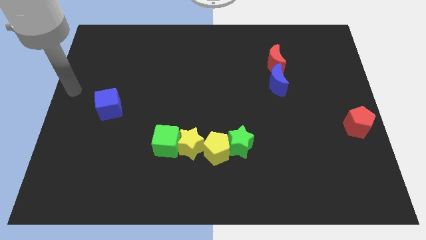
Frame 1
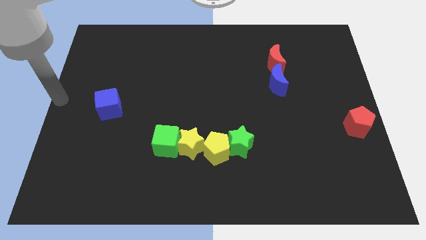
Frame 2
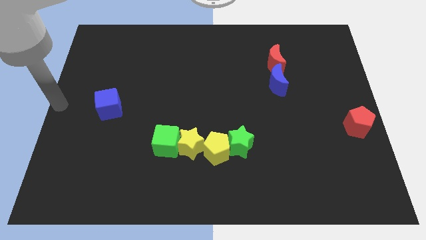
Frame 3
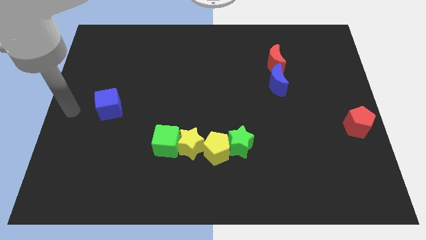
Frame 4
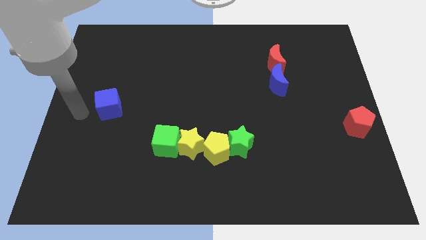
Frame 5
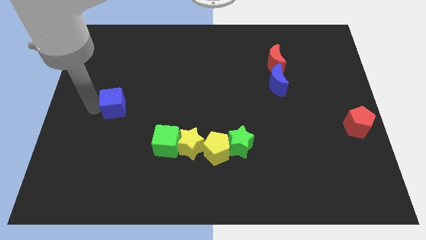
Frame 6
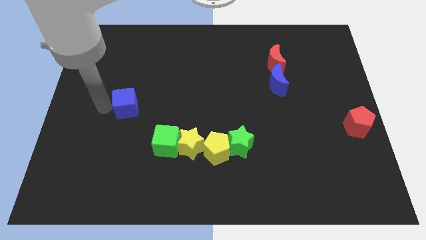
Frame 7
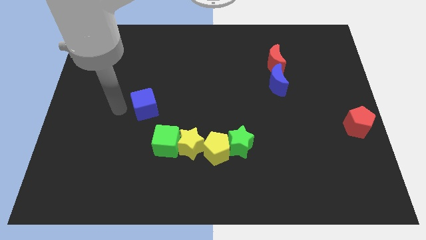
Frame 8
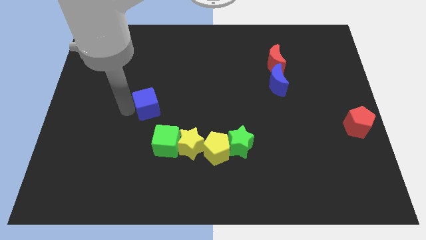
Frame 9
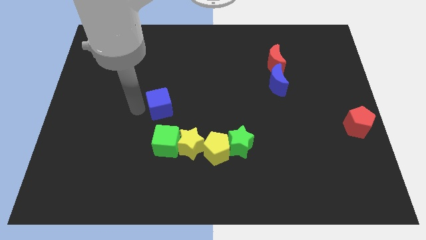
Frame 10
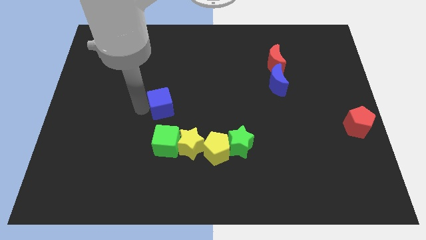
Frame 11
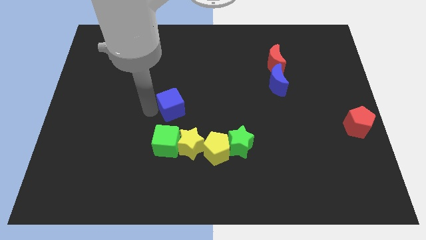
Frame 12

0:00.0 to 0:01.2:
place the blue cube above the green cube

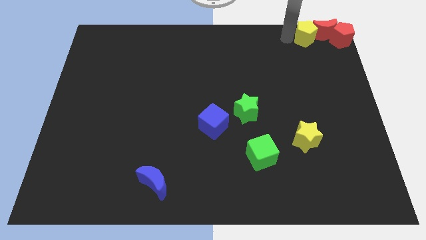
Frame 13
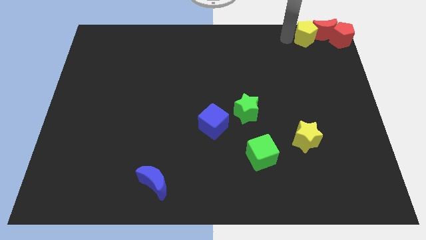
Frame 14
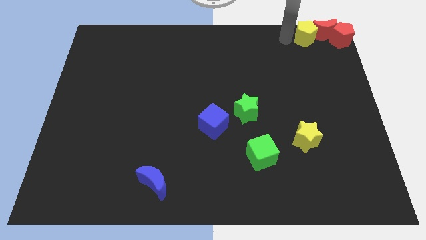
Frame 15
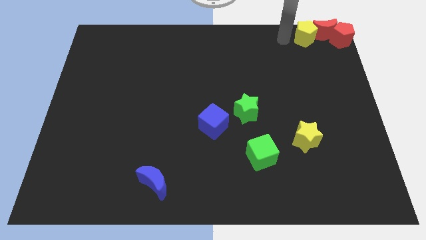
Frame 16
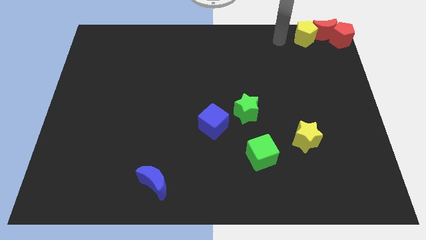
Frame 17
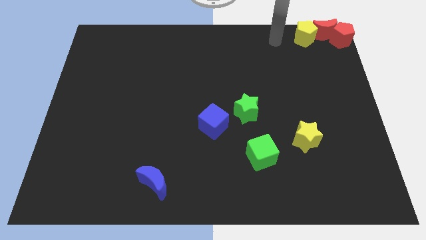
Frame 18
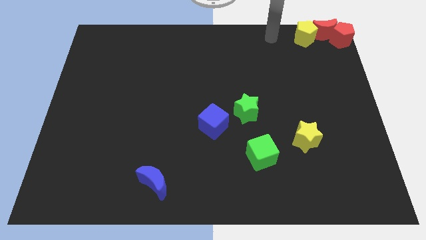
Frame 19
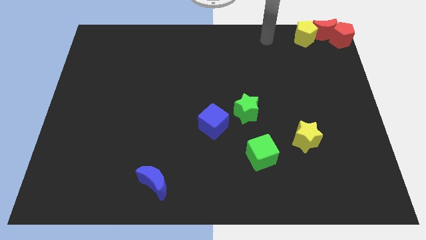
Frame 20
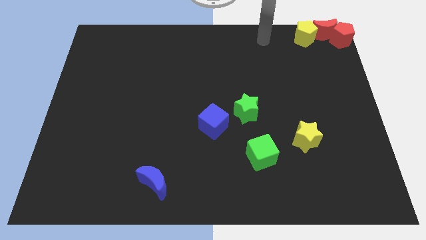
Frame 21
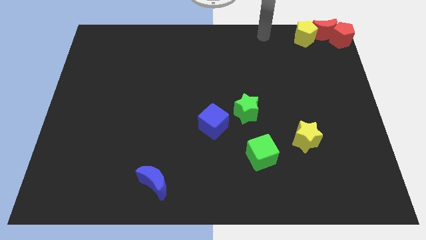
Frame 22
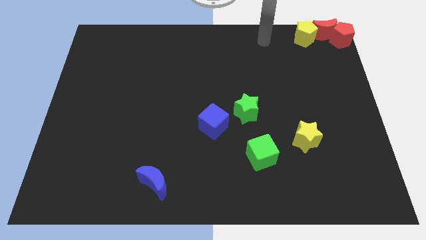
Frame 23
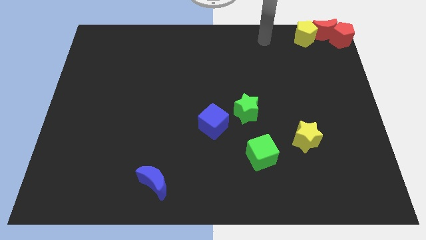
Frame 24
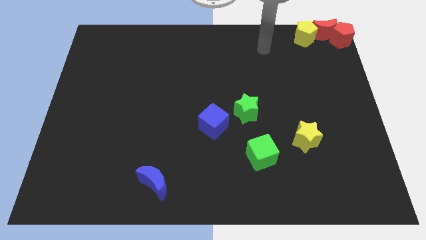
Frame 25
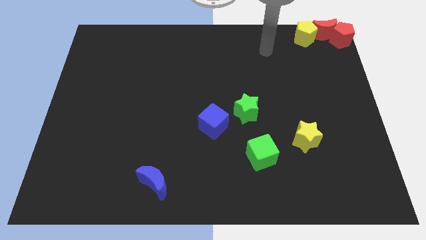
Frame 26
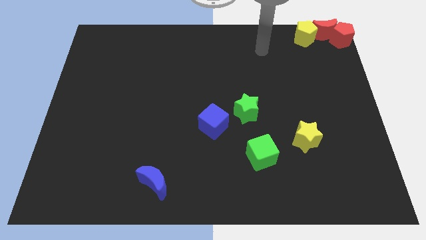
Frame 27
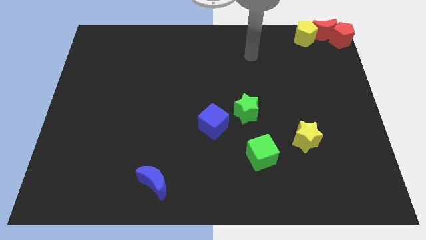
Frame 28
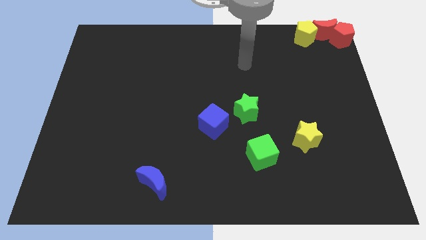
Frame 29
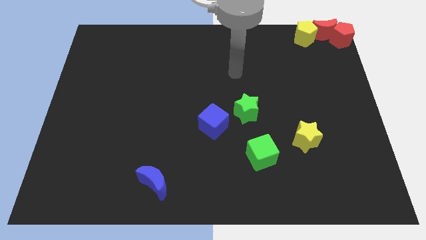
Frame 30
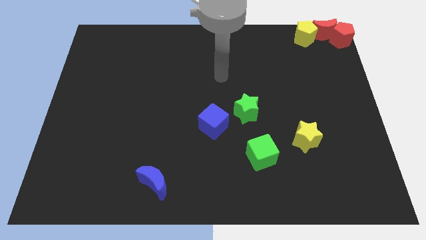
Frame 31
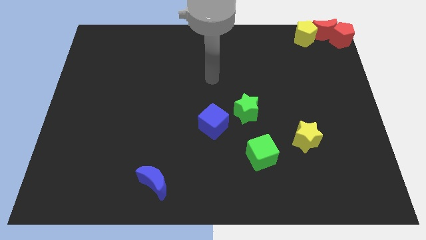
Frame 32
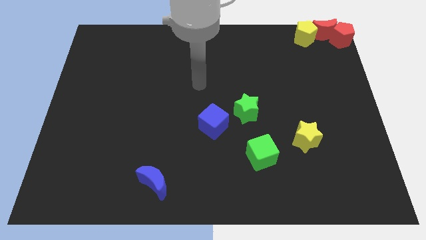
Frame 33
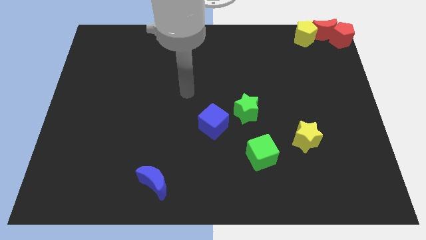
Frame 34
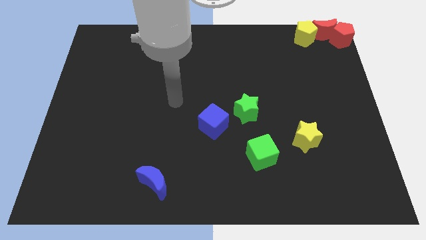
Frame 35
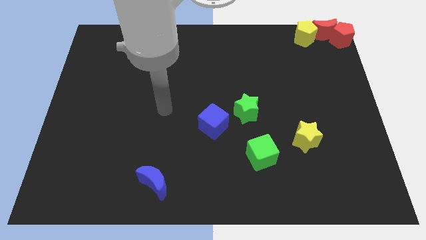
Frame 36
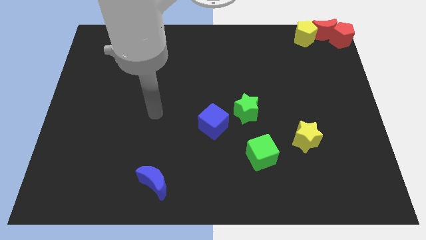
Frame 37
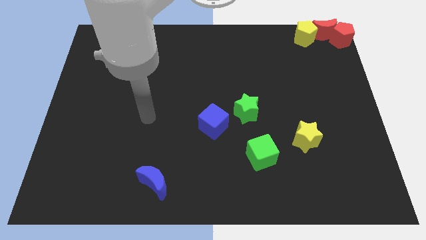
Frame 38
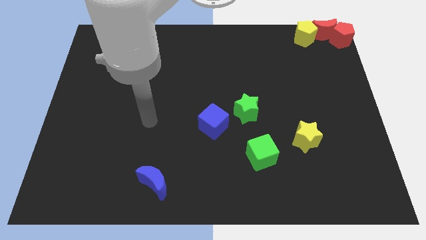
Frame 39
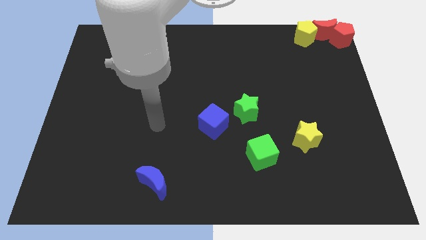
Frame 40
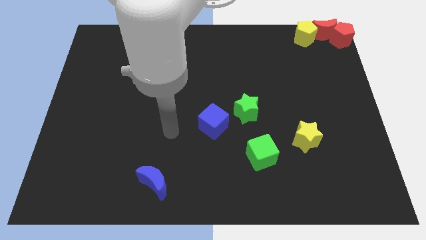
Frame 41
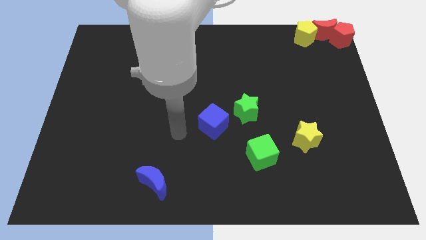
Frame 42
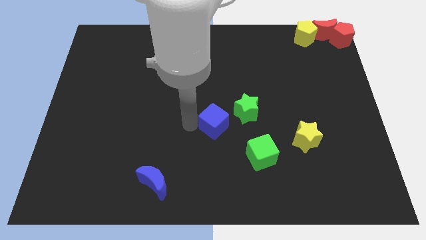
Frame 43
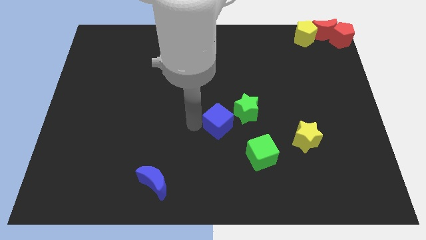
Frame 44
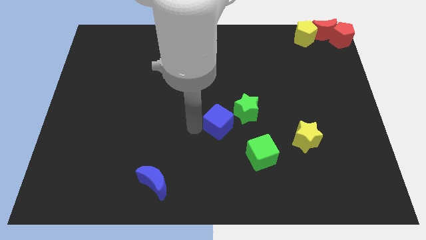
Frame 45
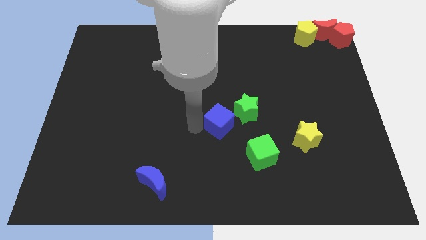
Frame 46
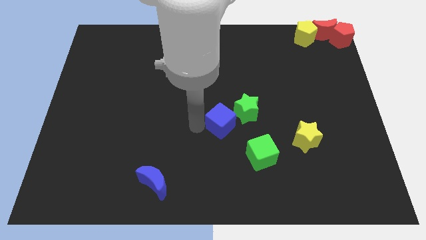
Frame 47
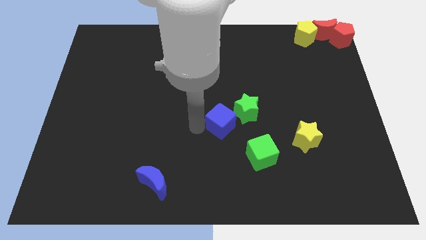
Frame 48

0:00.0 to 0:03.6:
move your arm into the blue cube

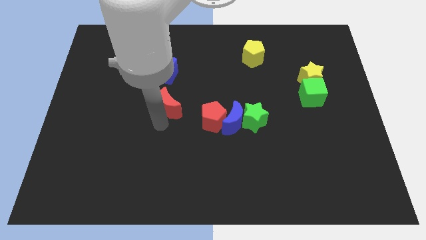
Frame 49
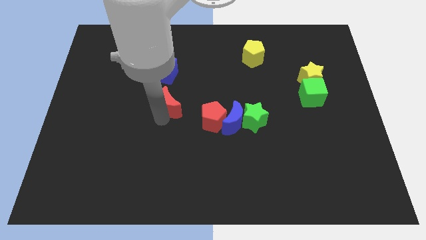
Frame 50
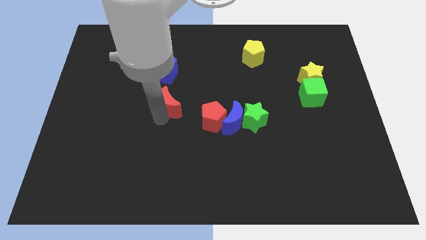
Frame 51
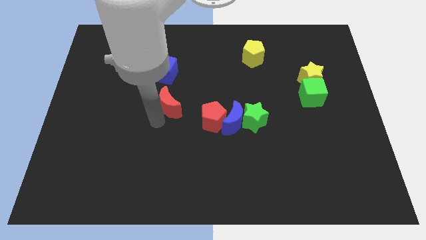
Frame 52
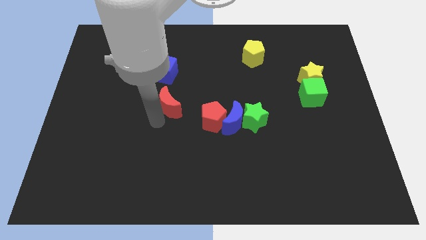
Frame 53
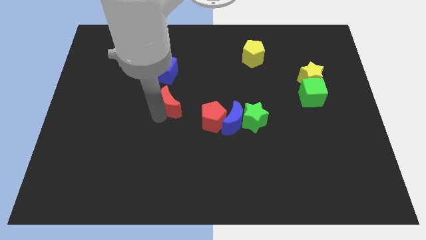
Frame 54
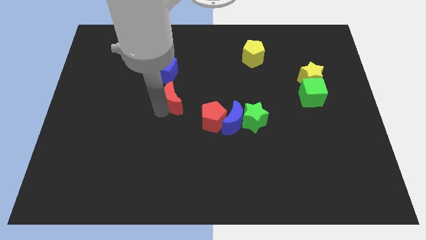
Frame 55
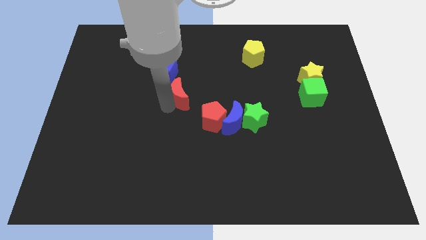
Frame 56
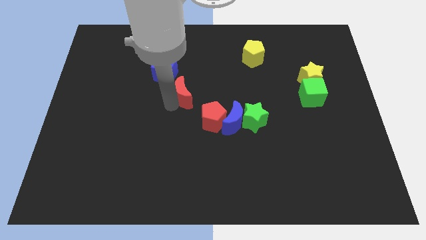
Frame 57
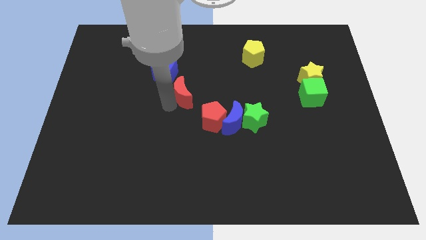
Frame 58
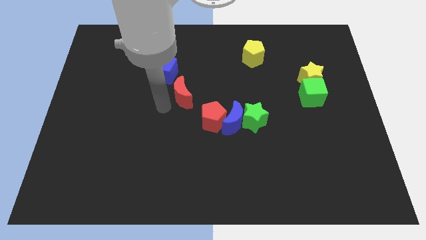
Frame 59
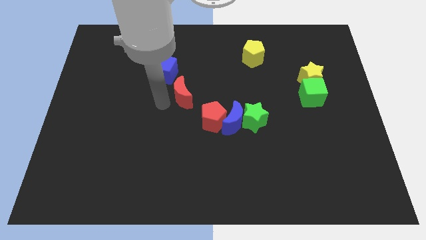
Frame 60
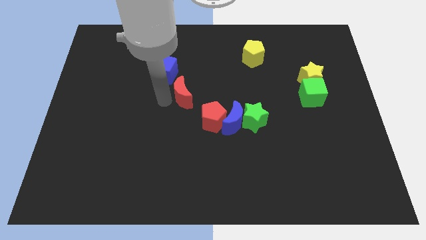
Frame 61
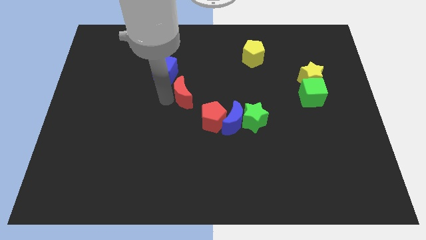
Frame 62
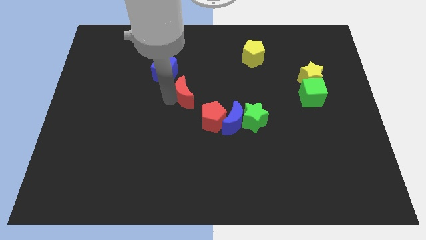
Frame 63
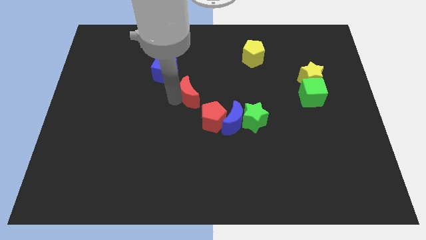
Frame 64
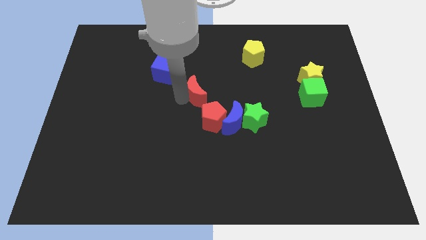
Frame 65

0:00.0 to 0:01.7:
move the red crescent to the top left side of the red pentagon

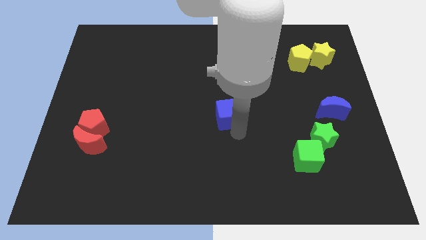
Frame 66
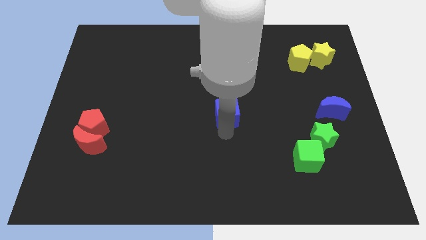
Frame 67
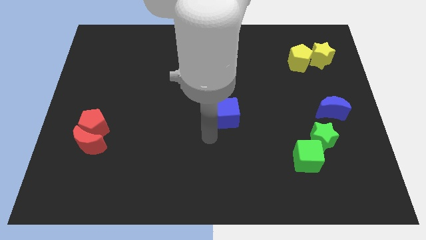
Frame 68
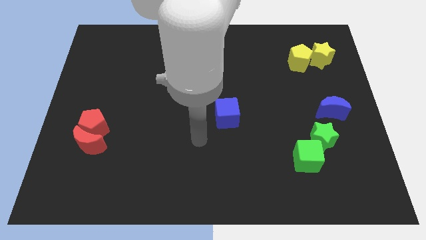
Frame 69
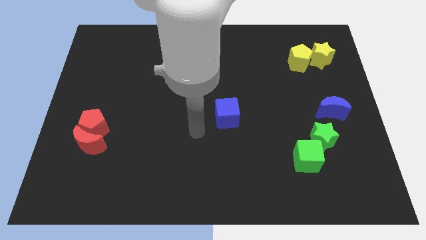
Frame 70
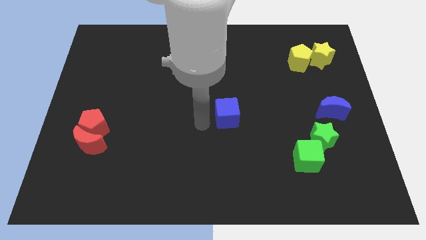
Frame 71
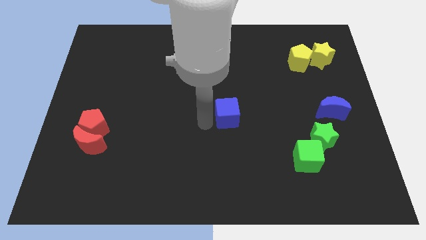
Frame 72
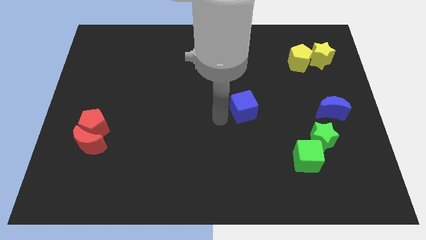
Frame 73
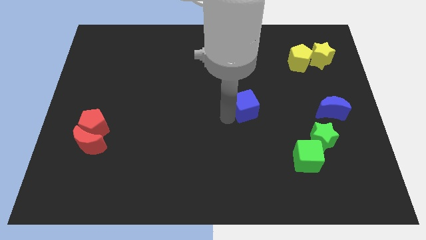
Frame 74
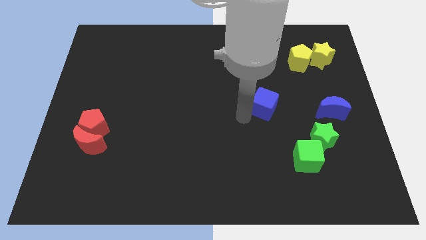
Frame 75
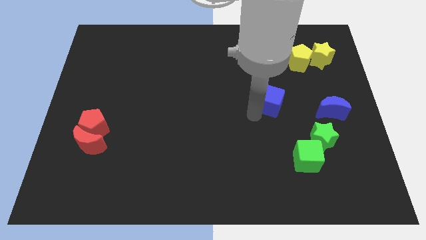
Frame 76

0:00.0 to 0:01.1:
place the blue cube diagonal to the green star

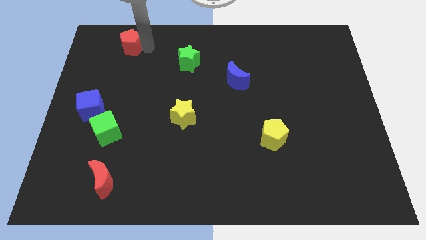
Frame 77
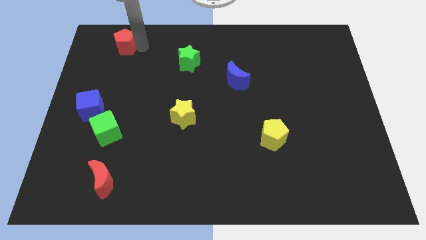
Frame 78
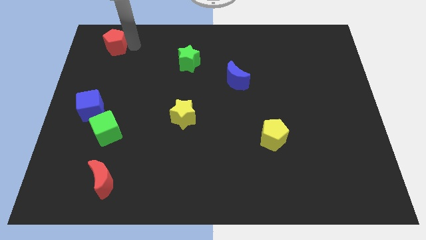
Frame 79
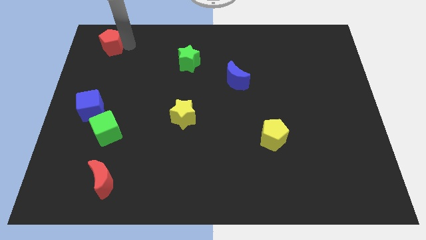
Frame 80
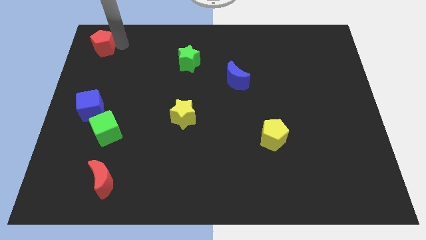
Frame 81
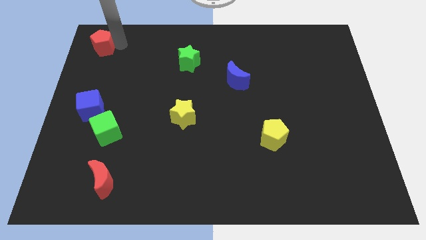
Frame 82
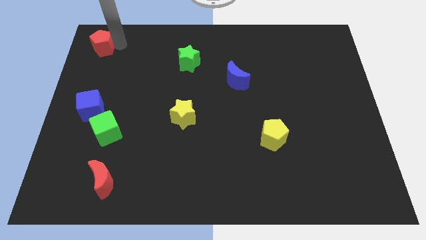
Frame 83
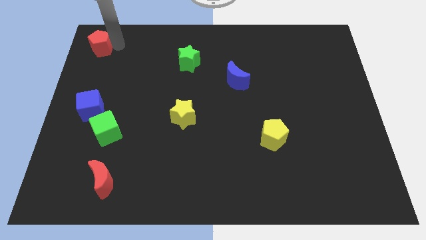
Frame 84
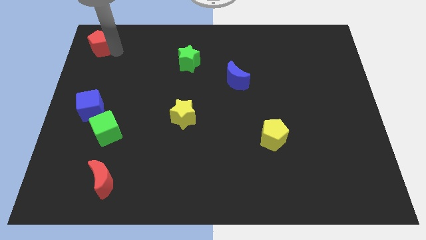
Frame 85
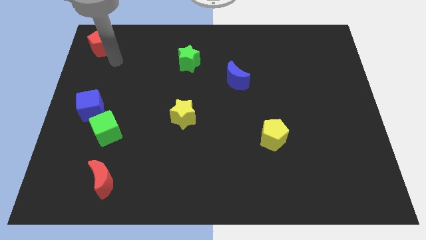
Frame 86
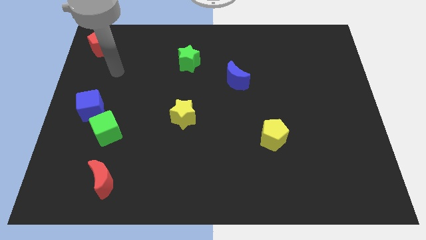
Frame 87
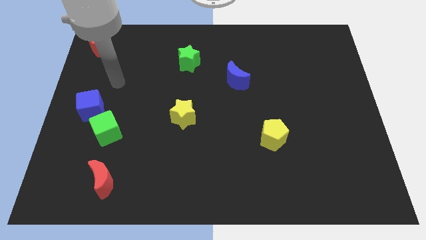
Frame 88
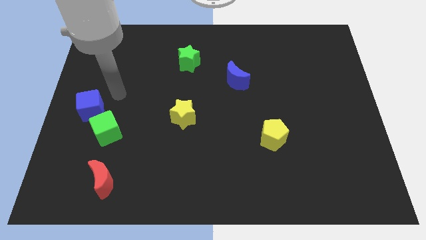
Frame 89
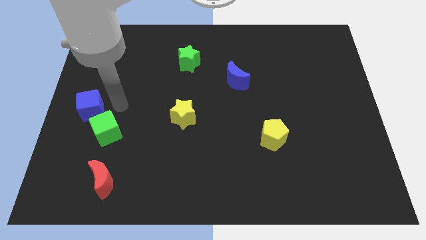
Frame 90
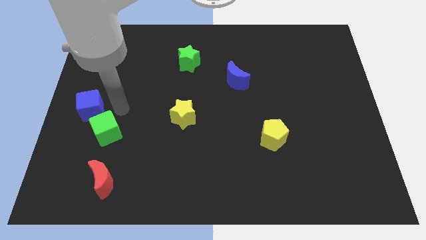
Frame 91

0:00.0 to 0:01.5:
move the red pentagon to the top left of the board
